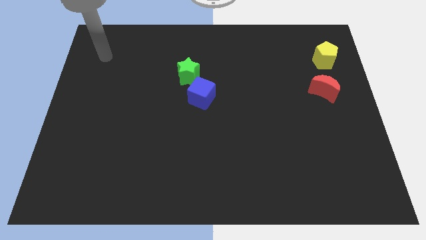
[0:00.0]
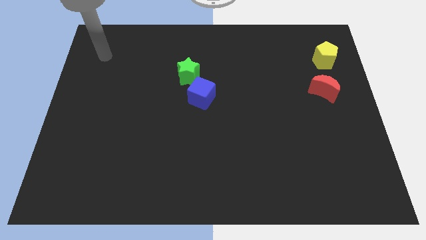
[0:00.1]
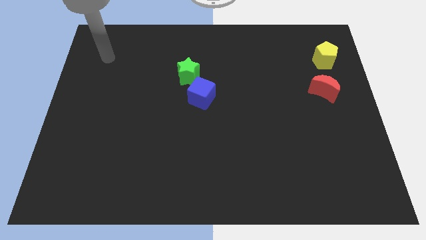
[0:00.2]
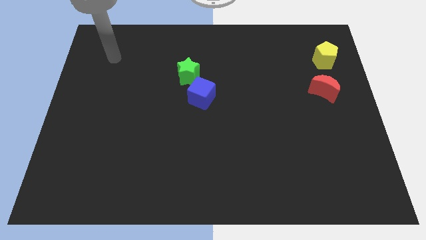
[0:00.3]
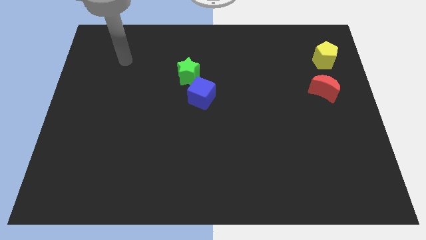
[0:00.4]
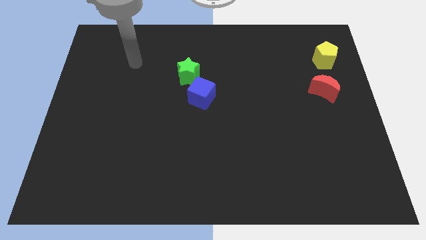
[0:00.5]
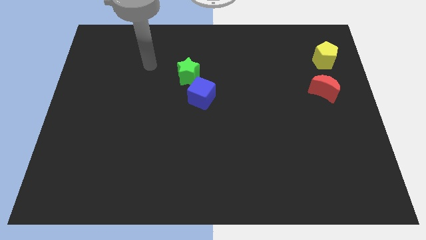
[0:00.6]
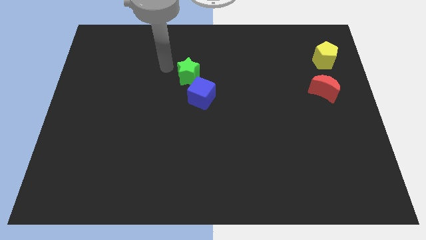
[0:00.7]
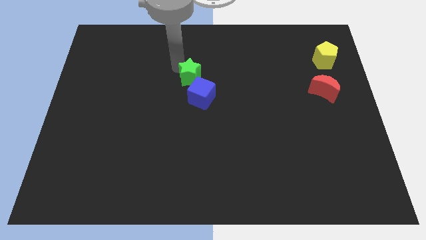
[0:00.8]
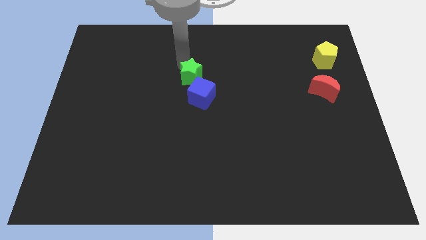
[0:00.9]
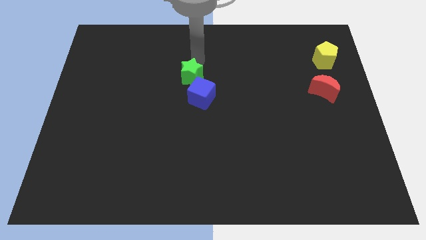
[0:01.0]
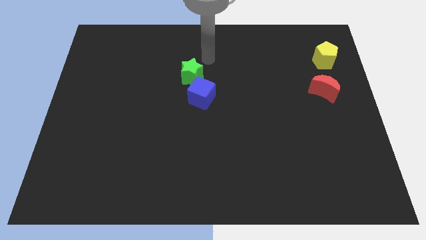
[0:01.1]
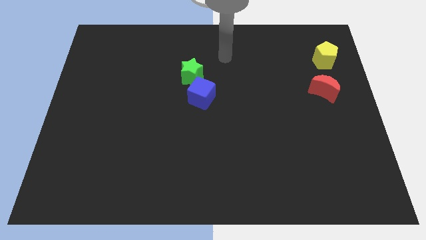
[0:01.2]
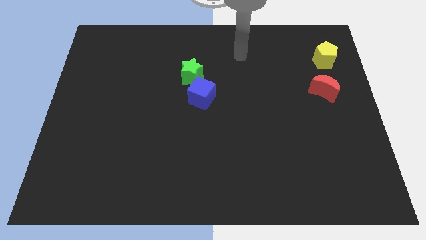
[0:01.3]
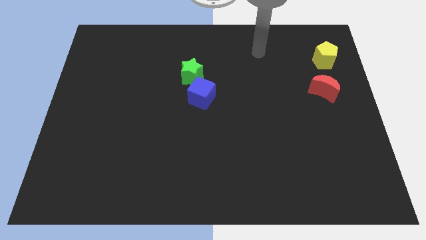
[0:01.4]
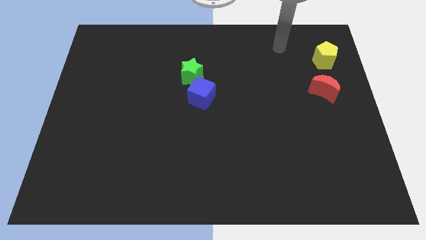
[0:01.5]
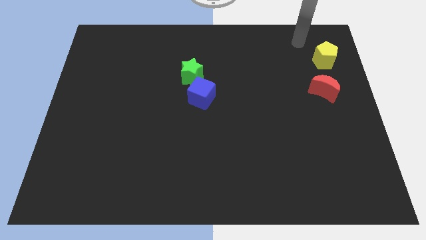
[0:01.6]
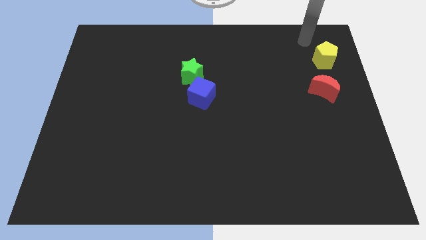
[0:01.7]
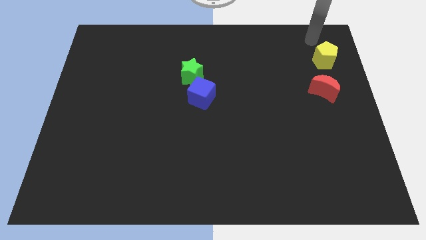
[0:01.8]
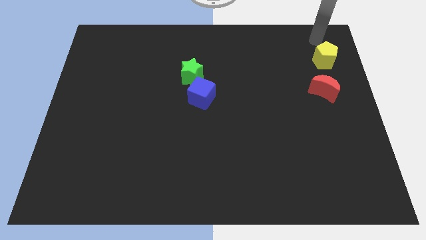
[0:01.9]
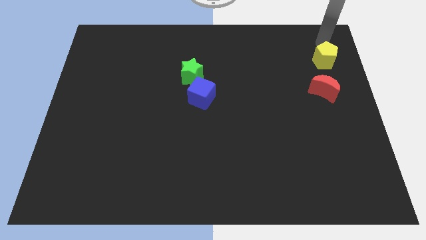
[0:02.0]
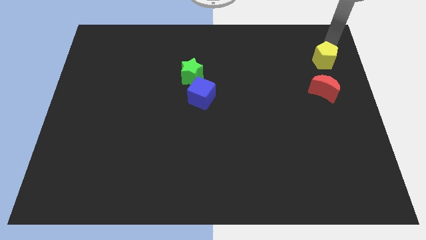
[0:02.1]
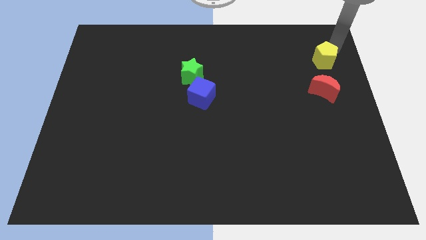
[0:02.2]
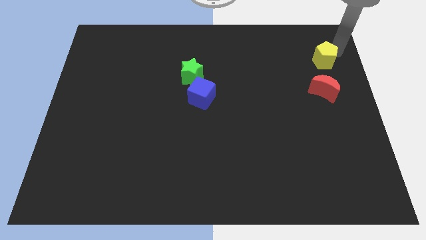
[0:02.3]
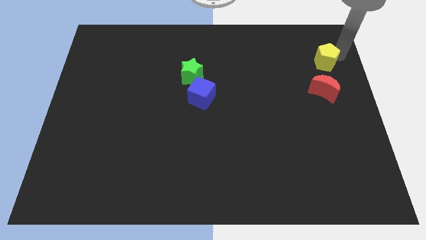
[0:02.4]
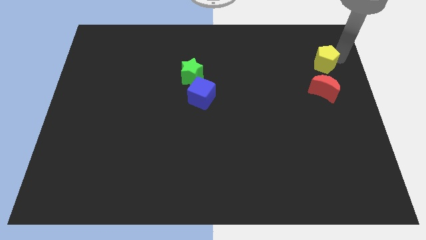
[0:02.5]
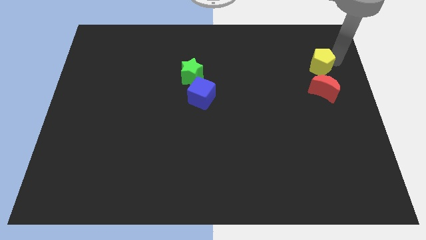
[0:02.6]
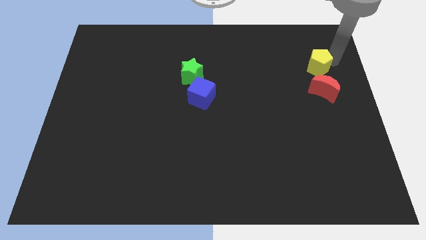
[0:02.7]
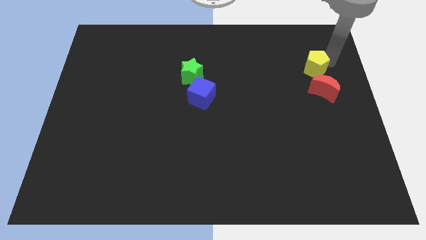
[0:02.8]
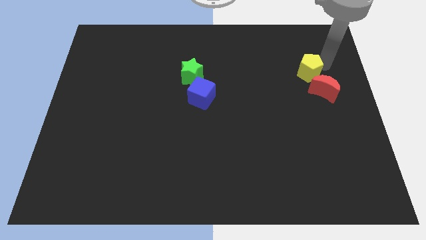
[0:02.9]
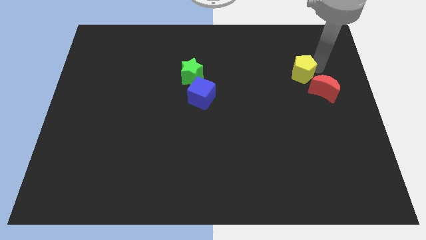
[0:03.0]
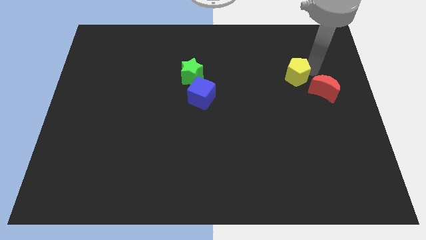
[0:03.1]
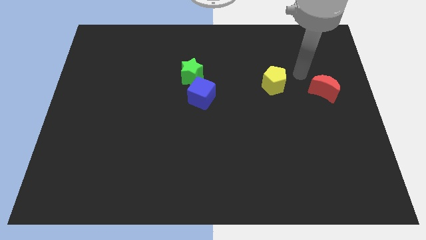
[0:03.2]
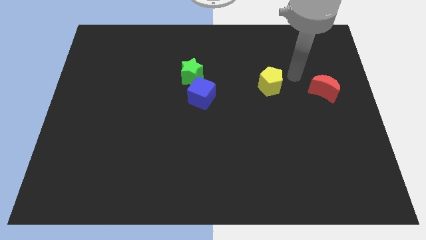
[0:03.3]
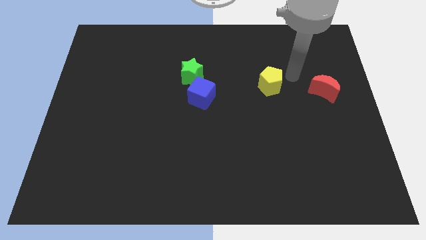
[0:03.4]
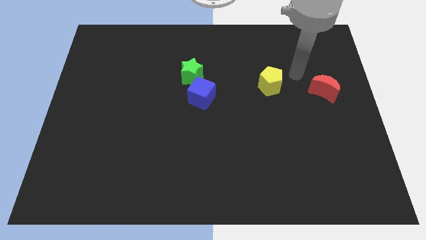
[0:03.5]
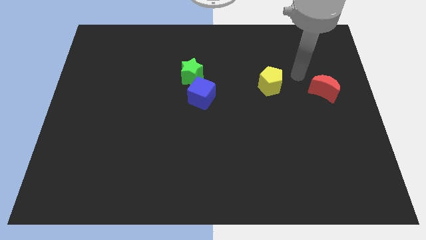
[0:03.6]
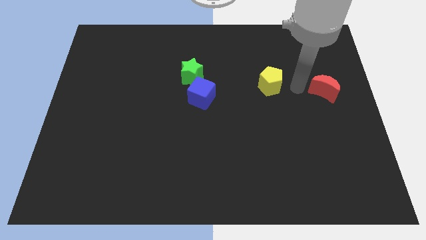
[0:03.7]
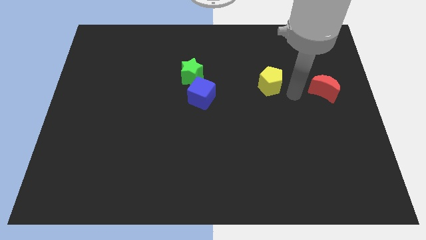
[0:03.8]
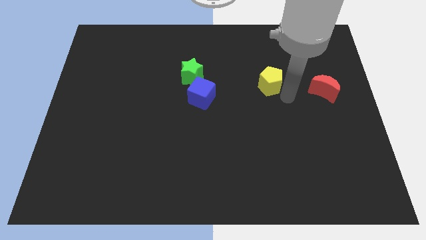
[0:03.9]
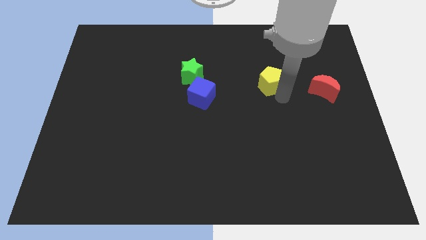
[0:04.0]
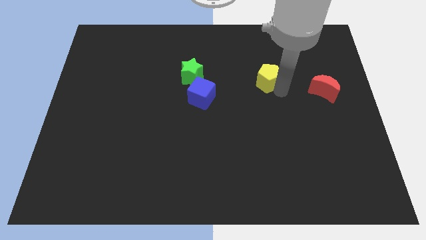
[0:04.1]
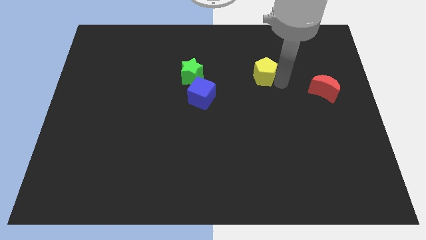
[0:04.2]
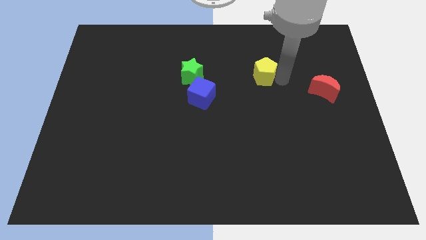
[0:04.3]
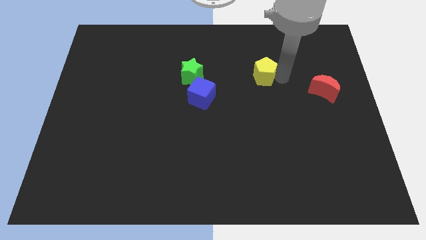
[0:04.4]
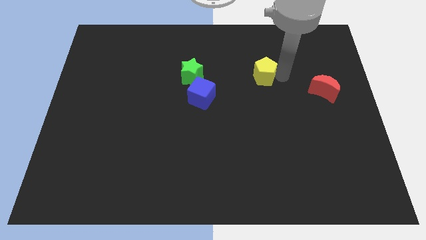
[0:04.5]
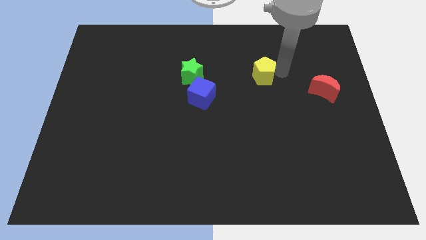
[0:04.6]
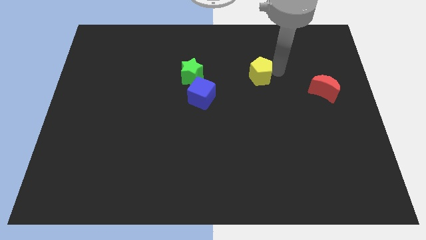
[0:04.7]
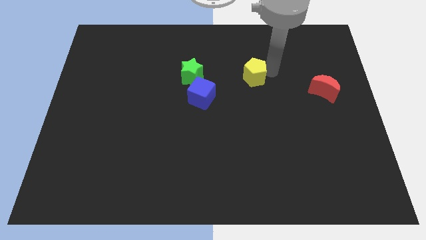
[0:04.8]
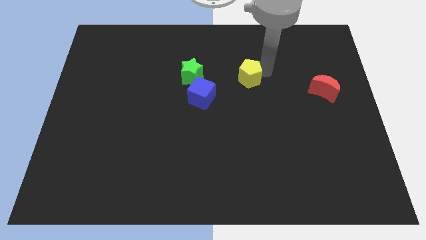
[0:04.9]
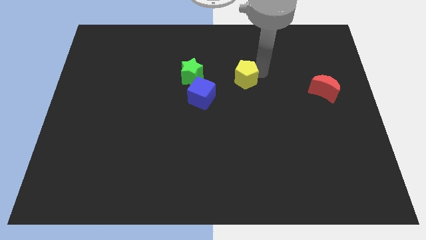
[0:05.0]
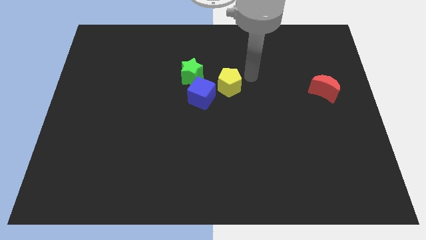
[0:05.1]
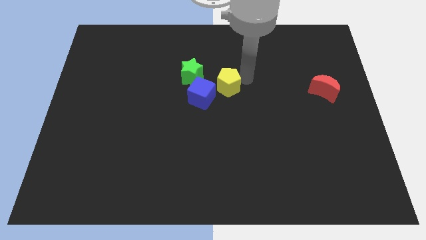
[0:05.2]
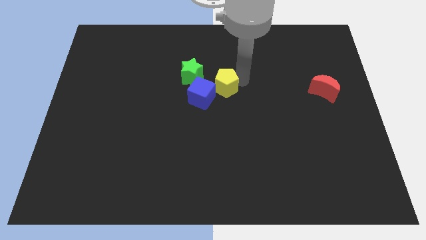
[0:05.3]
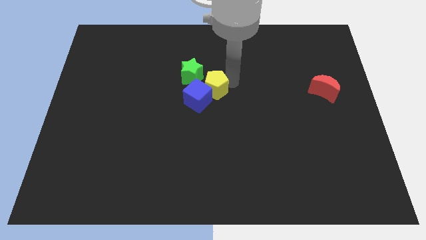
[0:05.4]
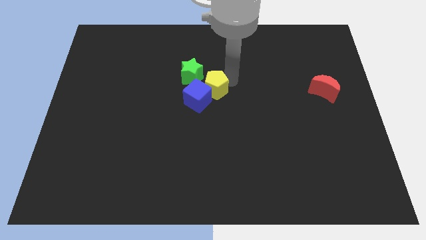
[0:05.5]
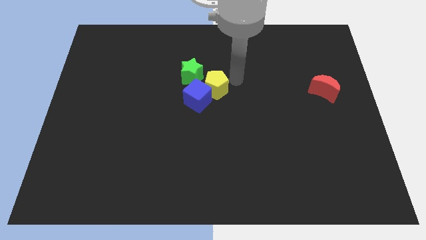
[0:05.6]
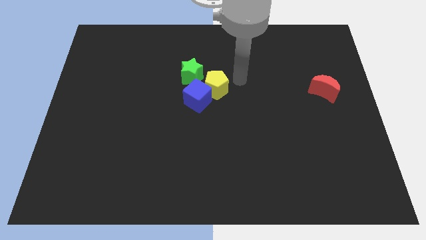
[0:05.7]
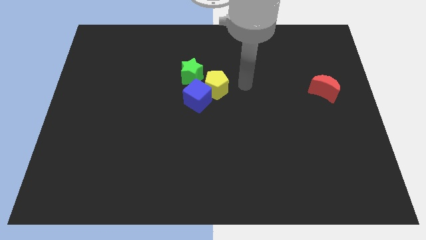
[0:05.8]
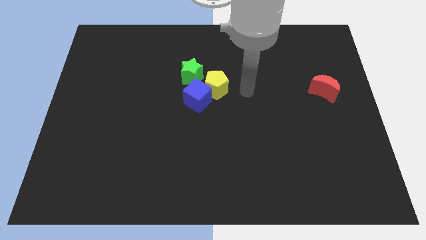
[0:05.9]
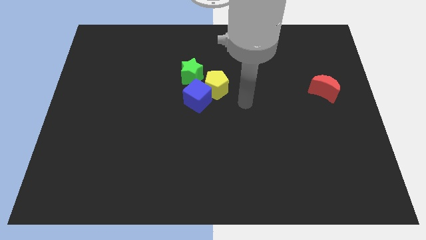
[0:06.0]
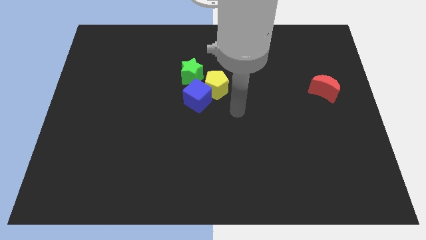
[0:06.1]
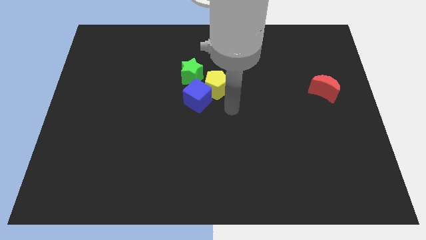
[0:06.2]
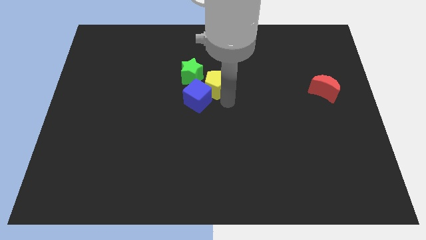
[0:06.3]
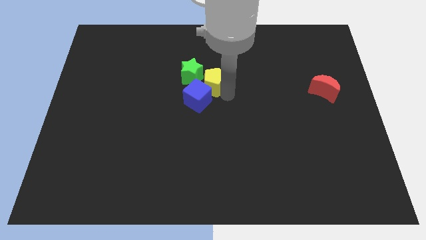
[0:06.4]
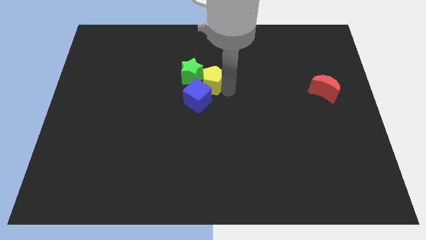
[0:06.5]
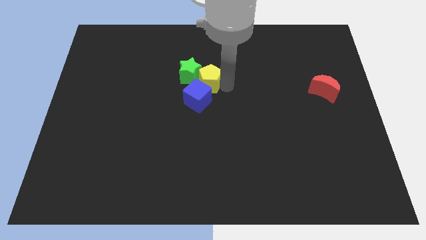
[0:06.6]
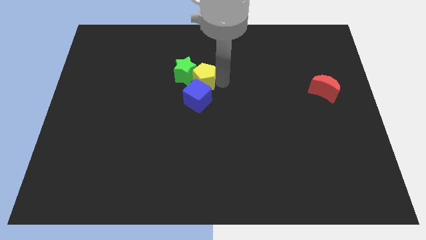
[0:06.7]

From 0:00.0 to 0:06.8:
push the yellow block close to the green star

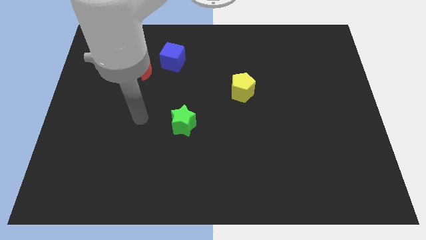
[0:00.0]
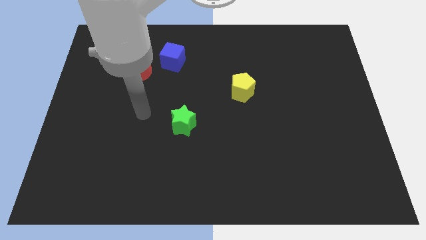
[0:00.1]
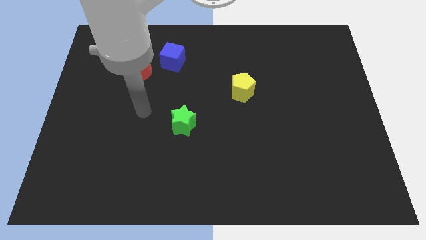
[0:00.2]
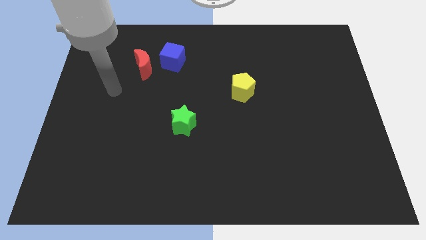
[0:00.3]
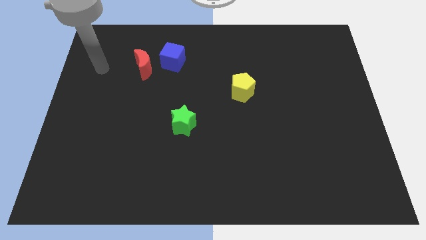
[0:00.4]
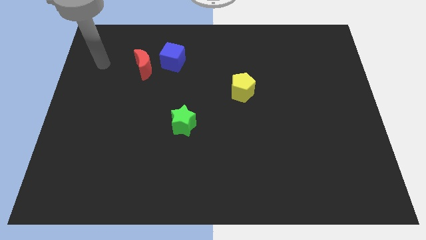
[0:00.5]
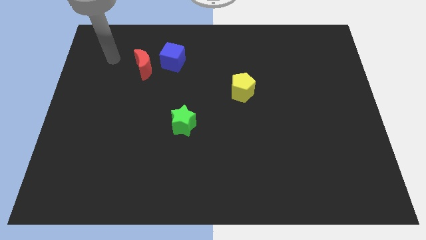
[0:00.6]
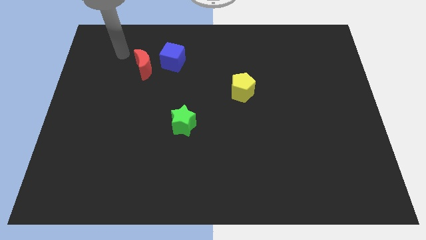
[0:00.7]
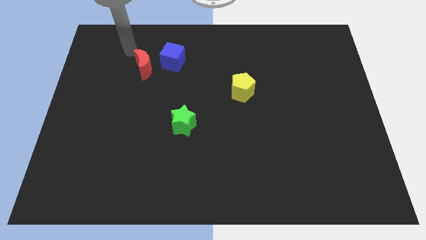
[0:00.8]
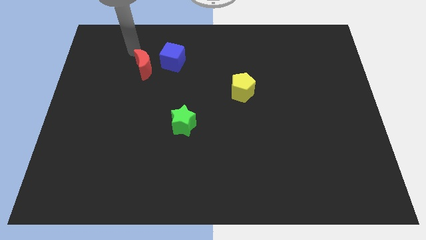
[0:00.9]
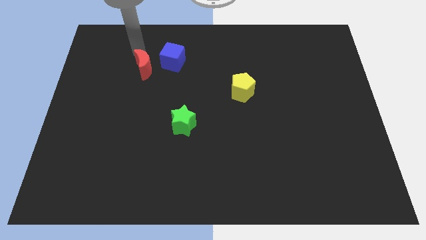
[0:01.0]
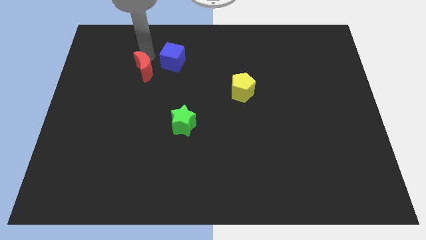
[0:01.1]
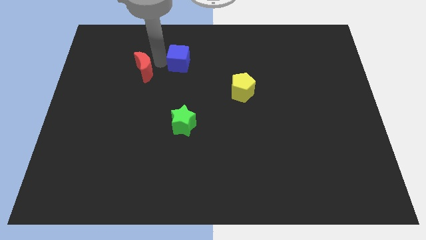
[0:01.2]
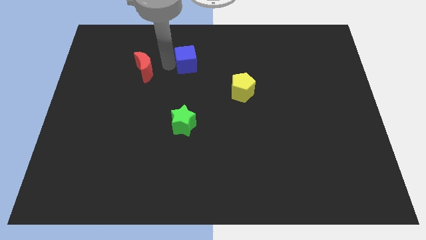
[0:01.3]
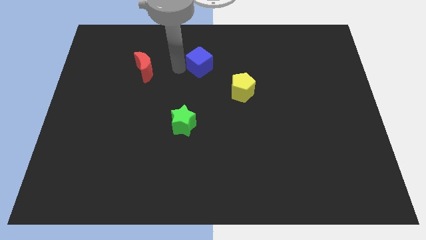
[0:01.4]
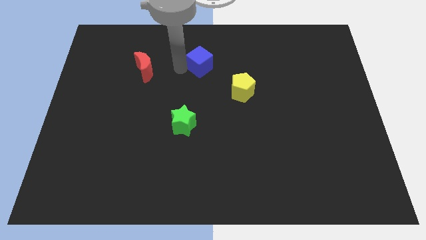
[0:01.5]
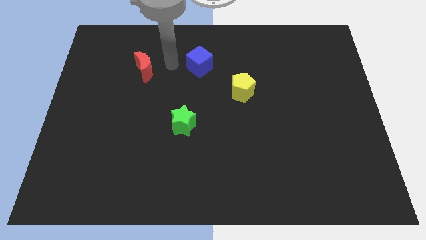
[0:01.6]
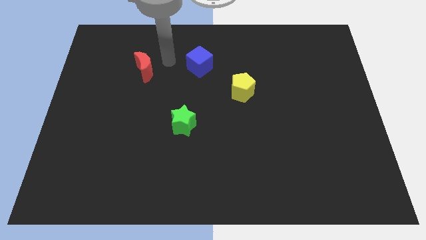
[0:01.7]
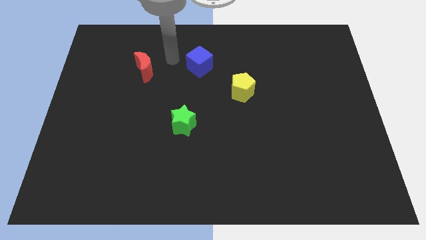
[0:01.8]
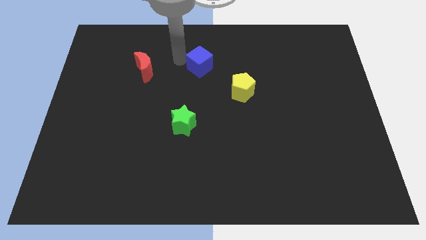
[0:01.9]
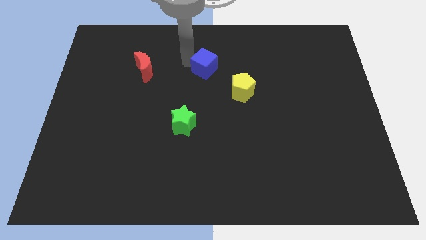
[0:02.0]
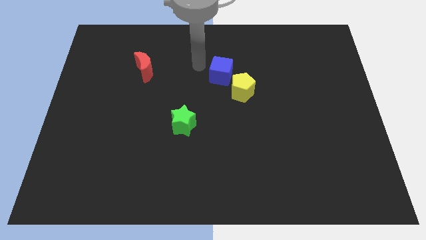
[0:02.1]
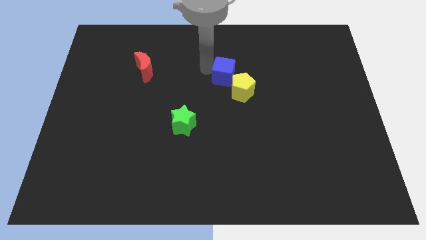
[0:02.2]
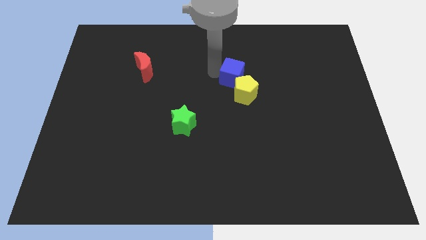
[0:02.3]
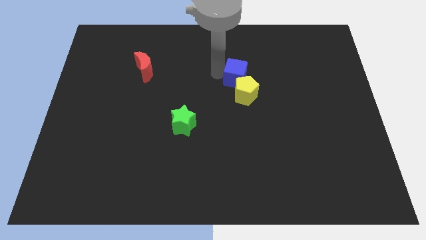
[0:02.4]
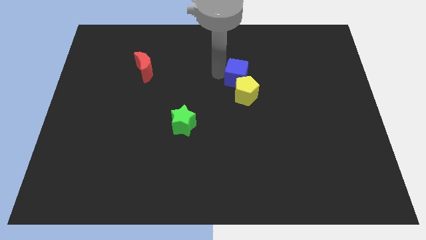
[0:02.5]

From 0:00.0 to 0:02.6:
put the blue block to the yellow block
